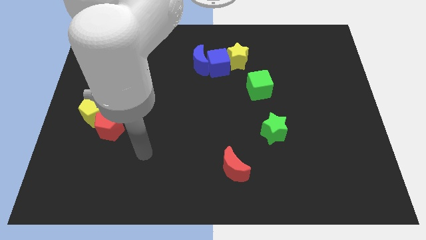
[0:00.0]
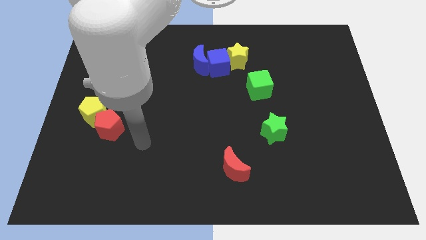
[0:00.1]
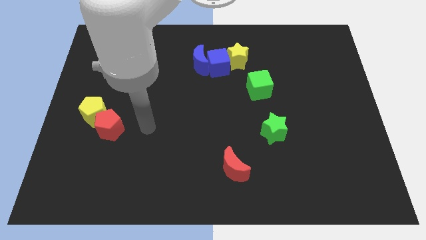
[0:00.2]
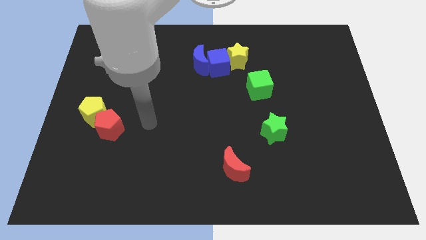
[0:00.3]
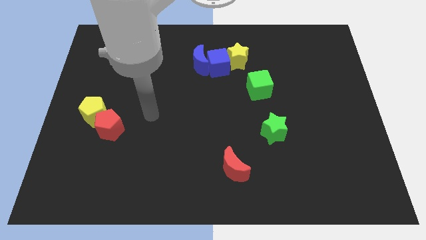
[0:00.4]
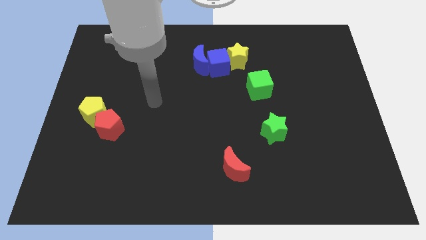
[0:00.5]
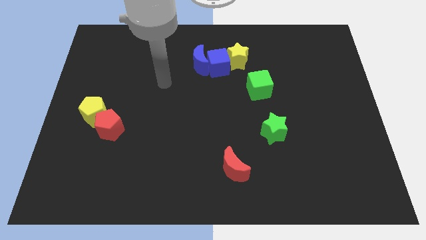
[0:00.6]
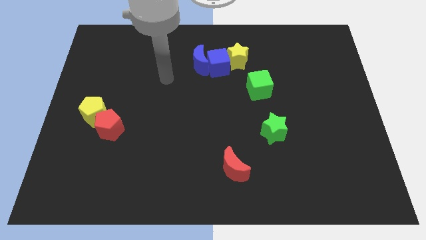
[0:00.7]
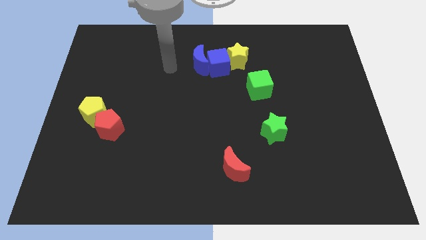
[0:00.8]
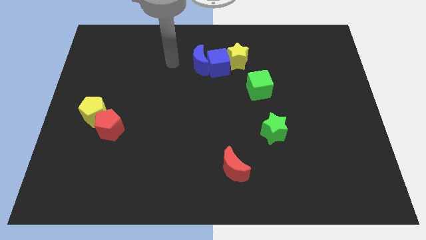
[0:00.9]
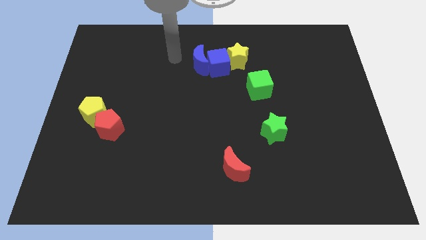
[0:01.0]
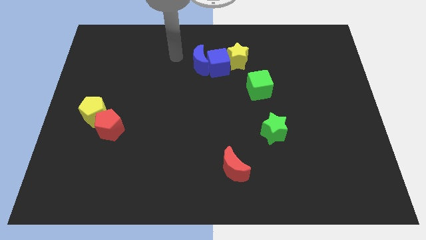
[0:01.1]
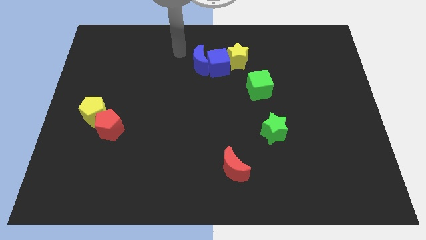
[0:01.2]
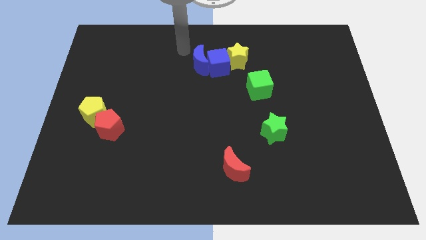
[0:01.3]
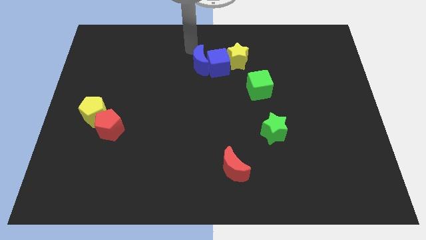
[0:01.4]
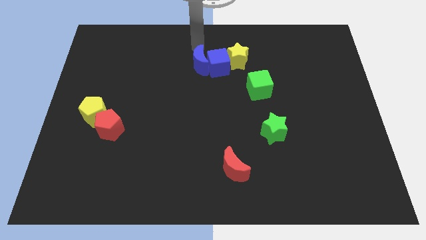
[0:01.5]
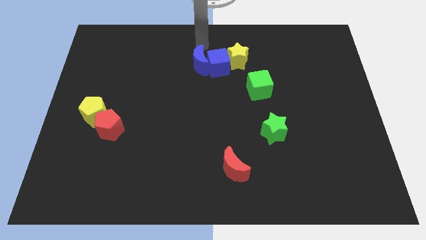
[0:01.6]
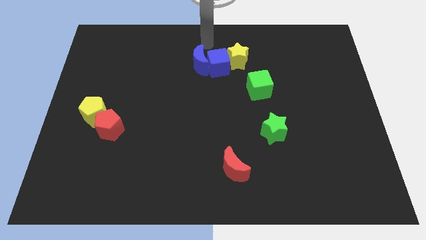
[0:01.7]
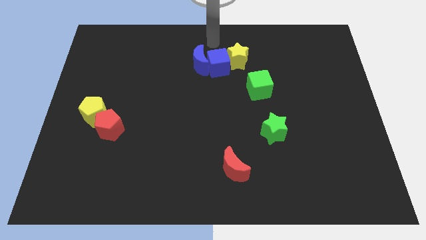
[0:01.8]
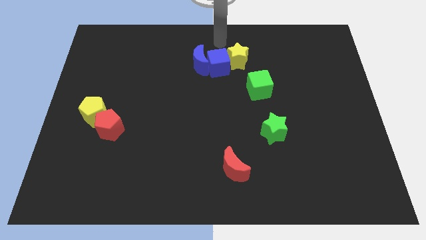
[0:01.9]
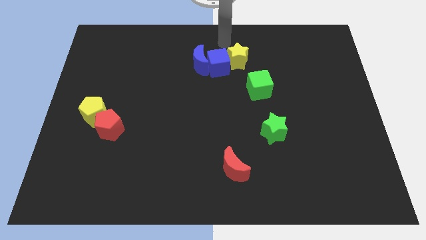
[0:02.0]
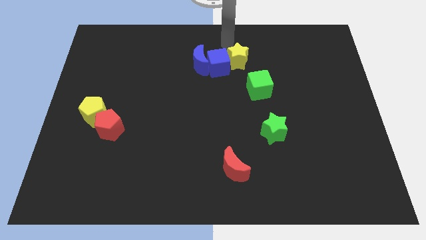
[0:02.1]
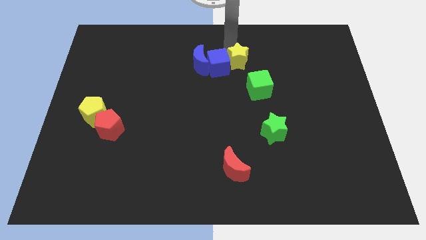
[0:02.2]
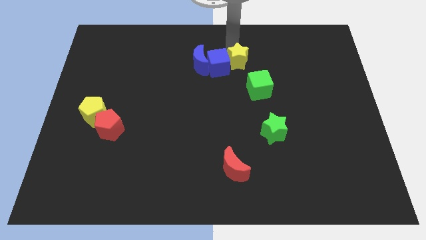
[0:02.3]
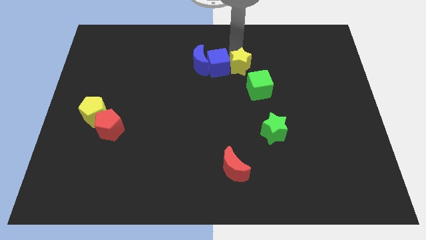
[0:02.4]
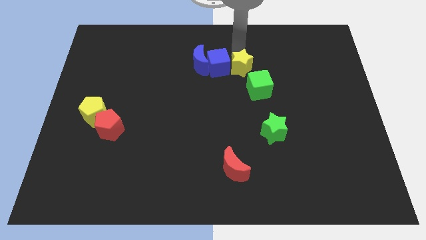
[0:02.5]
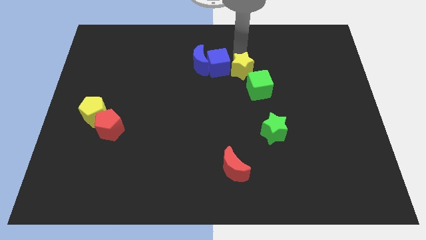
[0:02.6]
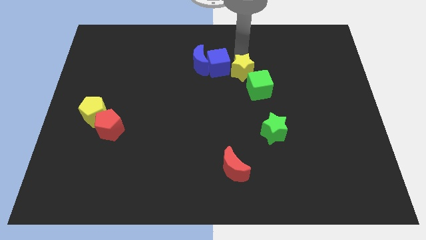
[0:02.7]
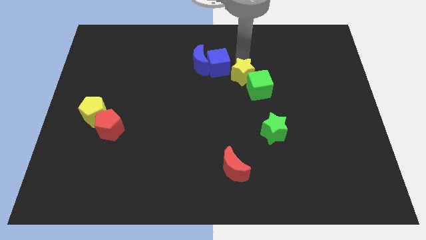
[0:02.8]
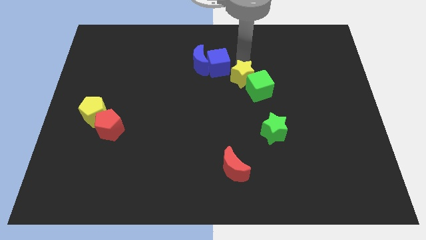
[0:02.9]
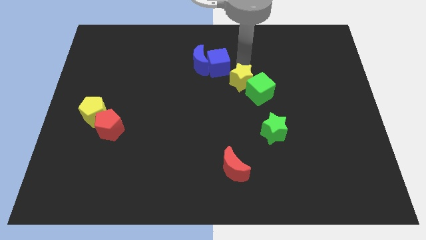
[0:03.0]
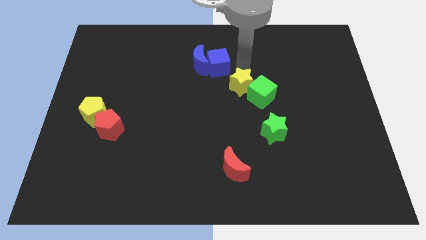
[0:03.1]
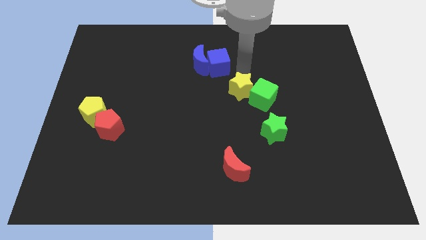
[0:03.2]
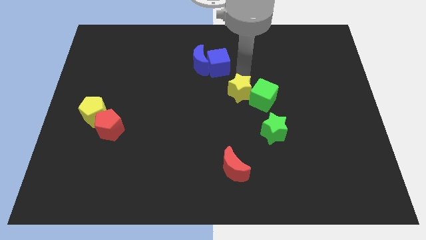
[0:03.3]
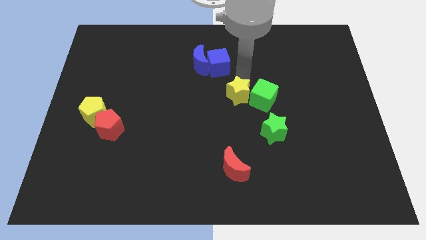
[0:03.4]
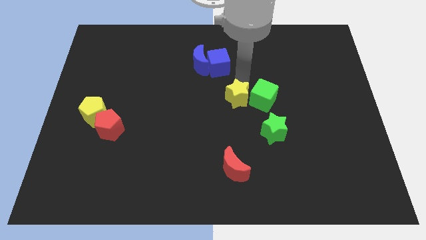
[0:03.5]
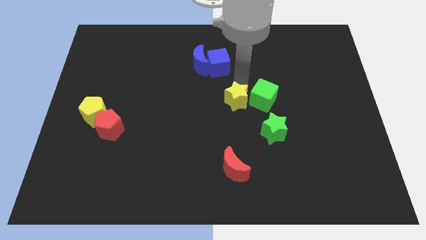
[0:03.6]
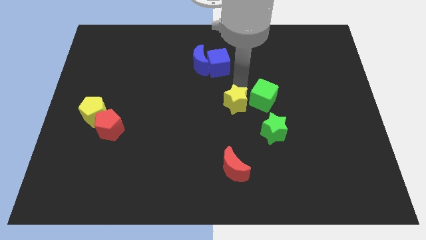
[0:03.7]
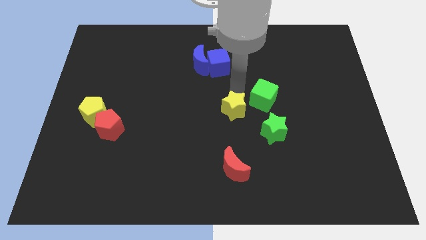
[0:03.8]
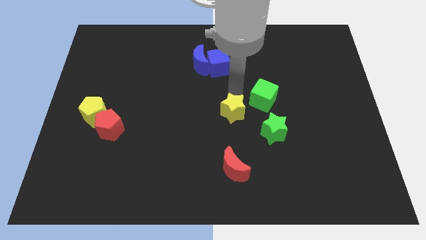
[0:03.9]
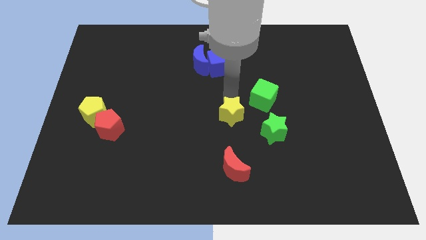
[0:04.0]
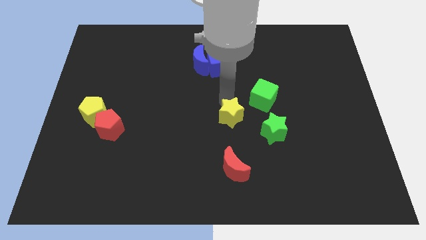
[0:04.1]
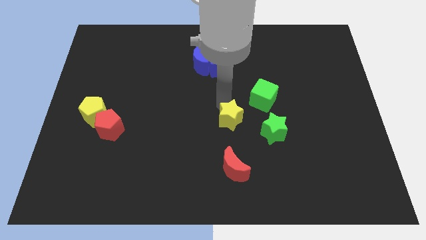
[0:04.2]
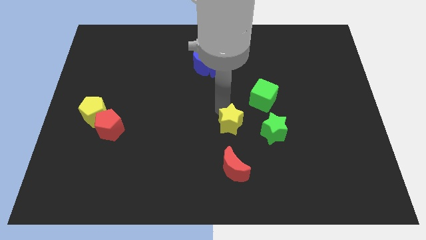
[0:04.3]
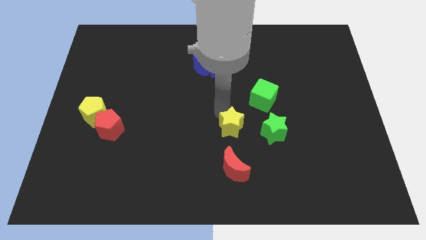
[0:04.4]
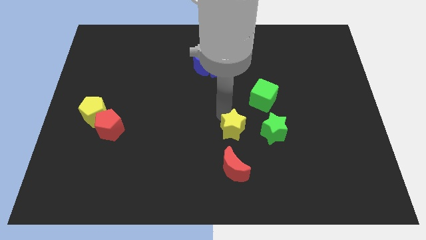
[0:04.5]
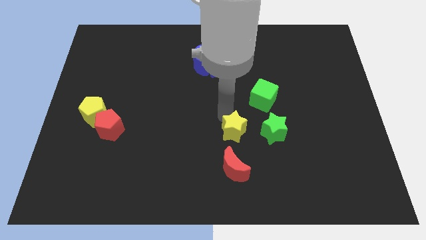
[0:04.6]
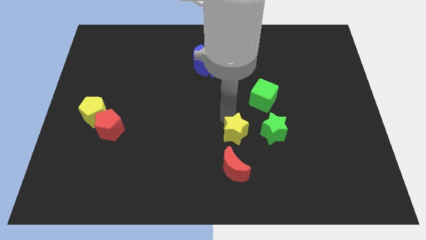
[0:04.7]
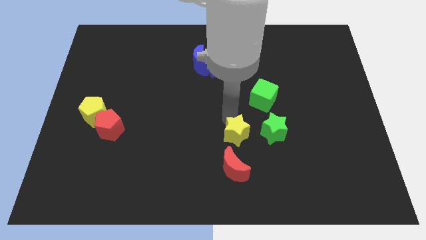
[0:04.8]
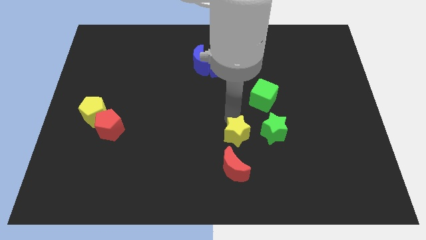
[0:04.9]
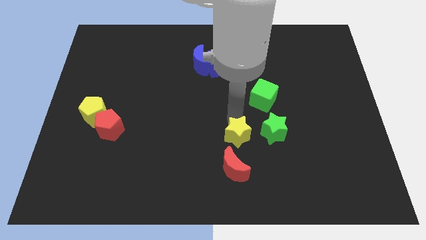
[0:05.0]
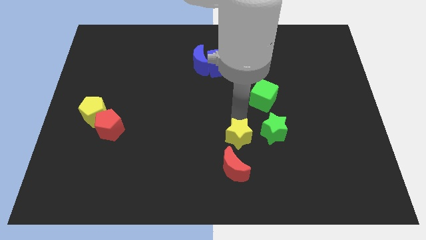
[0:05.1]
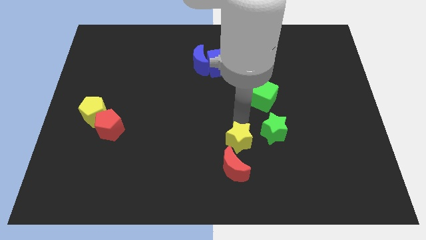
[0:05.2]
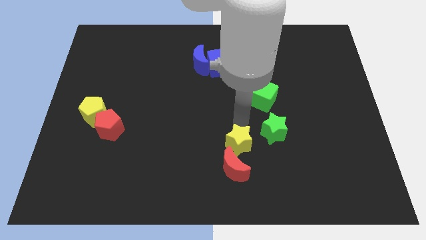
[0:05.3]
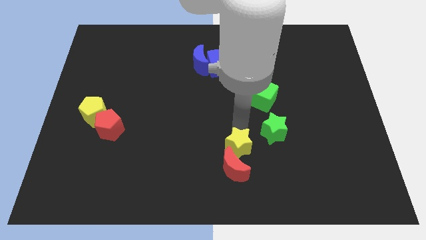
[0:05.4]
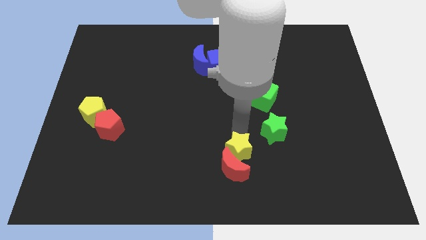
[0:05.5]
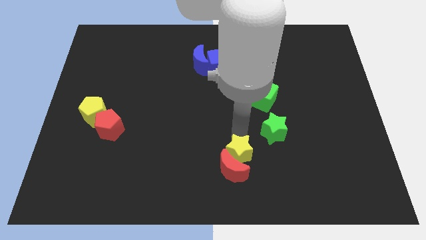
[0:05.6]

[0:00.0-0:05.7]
move the yellow star close to the red moon

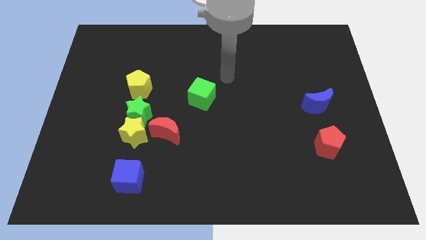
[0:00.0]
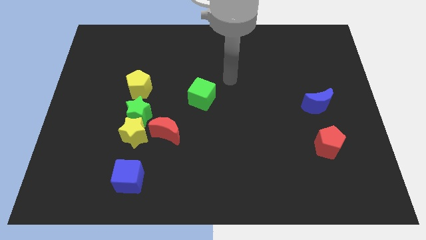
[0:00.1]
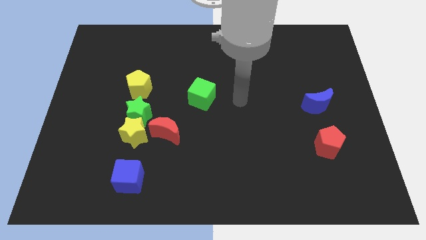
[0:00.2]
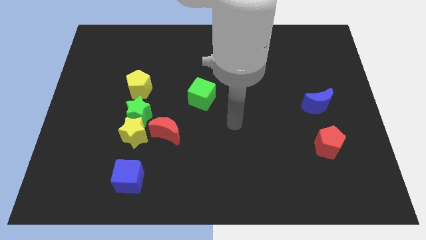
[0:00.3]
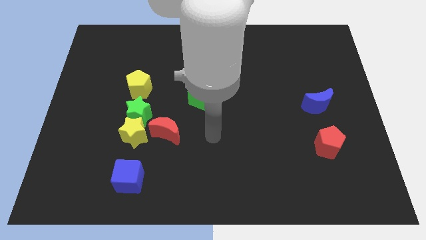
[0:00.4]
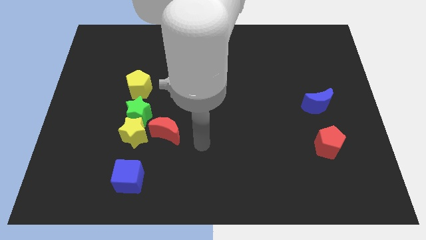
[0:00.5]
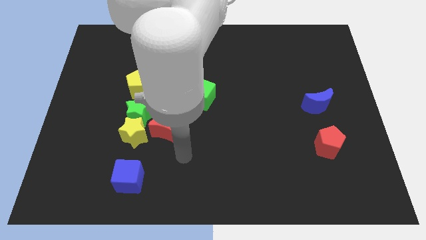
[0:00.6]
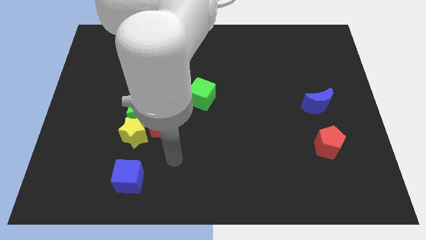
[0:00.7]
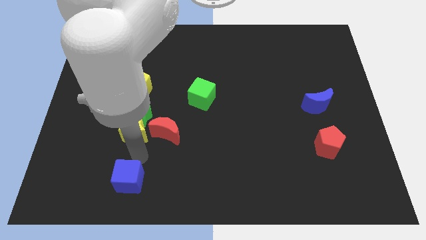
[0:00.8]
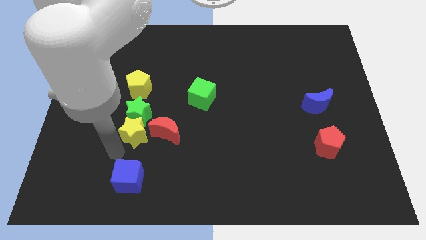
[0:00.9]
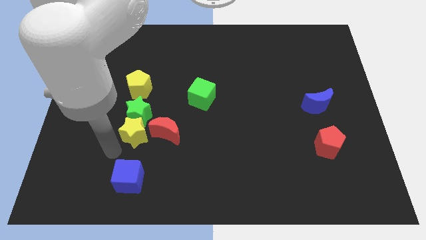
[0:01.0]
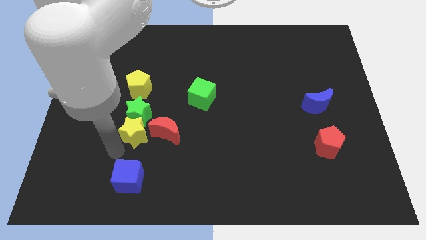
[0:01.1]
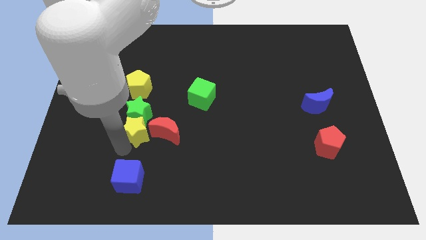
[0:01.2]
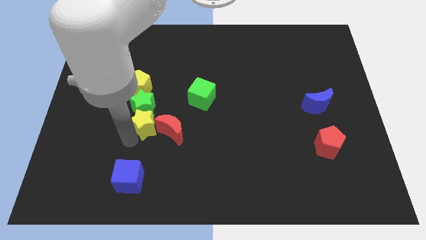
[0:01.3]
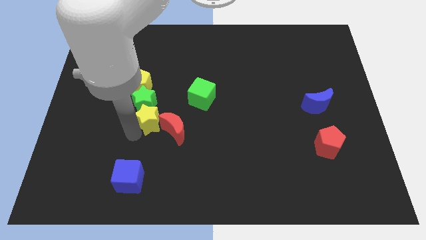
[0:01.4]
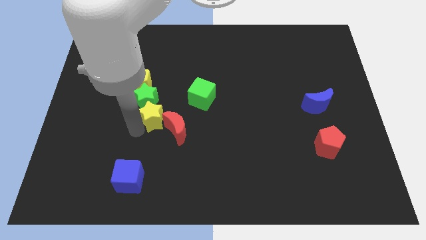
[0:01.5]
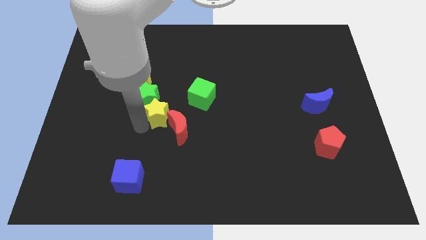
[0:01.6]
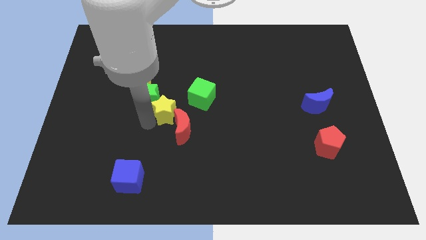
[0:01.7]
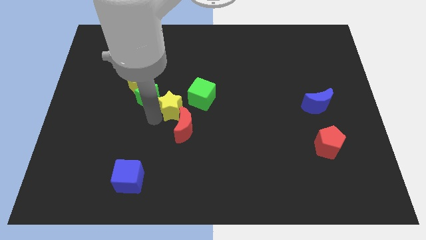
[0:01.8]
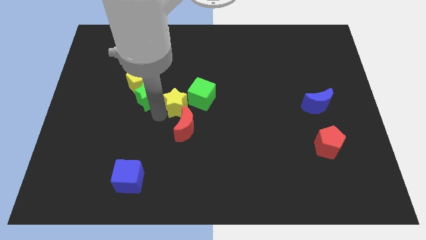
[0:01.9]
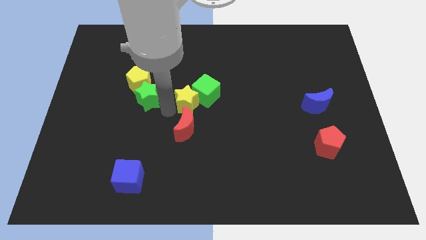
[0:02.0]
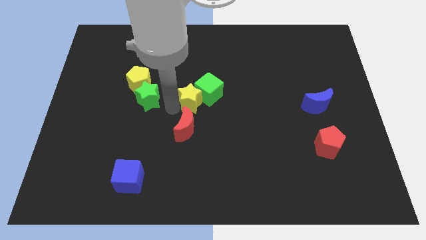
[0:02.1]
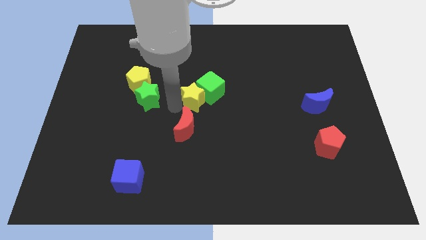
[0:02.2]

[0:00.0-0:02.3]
put the yellow star to the green cube

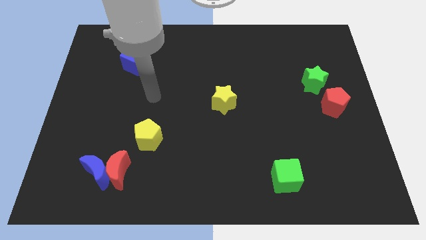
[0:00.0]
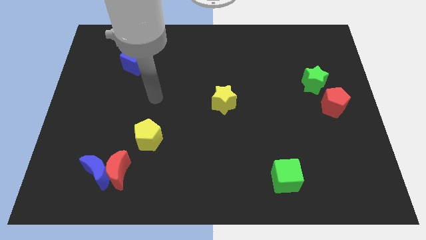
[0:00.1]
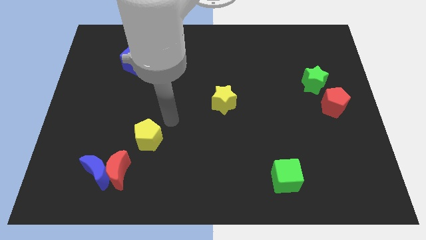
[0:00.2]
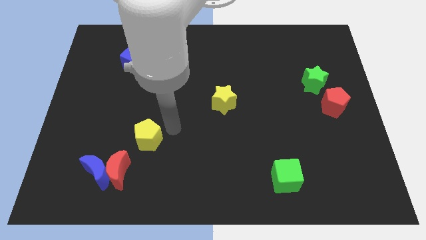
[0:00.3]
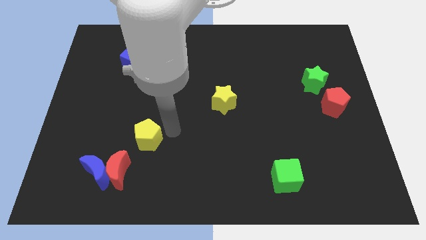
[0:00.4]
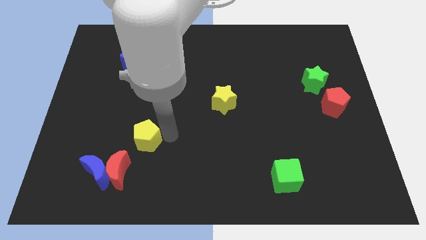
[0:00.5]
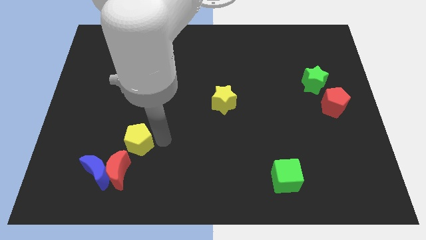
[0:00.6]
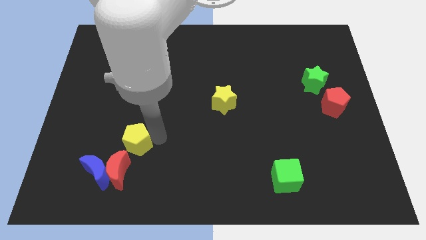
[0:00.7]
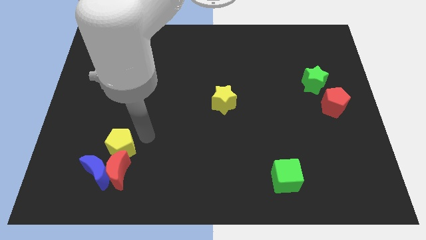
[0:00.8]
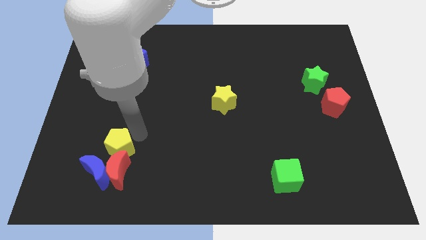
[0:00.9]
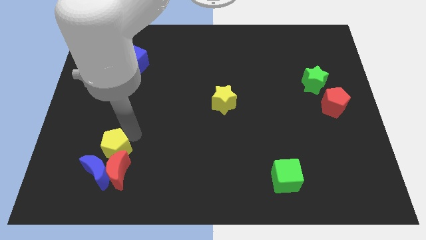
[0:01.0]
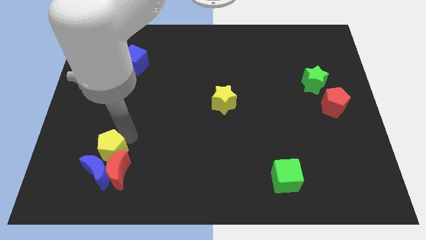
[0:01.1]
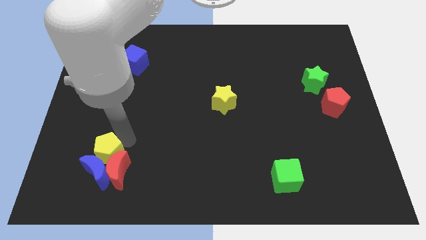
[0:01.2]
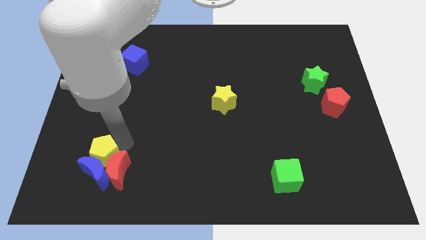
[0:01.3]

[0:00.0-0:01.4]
push the yellow pentagon close to the blue moon
